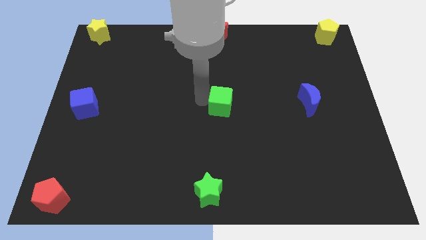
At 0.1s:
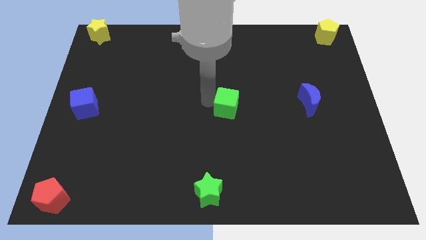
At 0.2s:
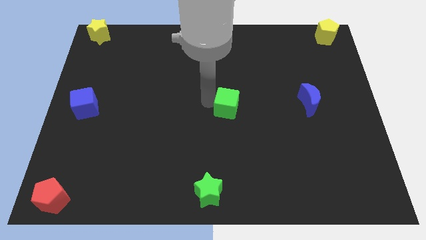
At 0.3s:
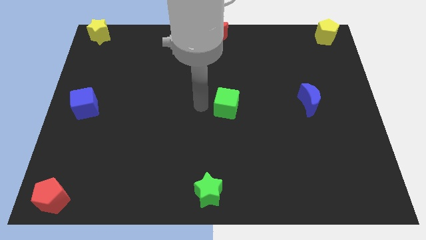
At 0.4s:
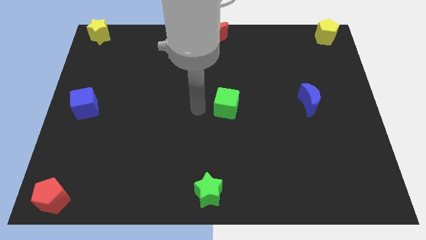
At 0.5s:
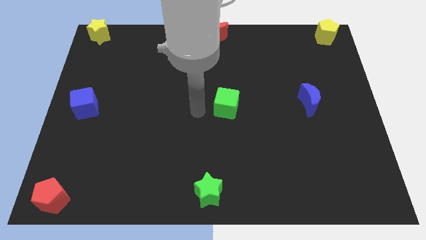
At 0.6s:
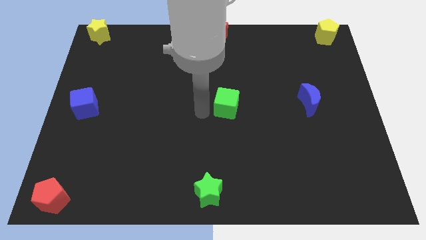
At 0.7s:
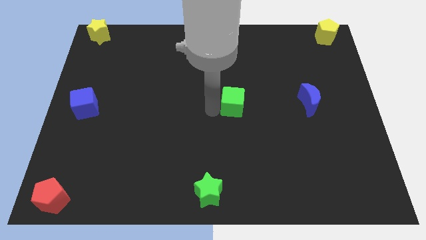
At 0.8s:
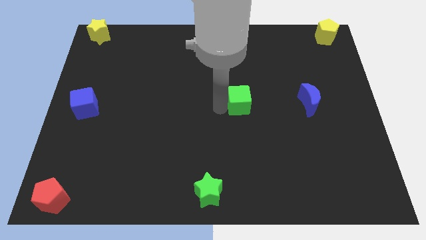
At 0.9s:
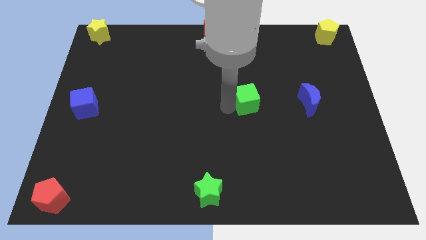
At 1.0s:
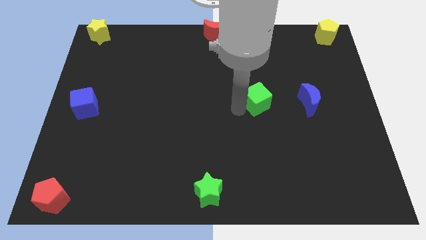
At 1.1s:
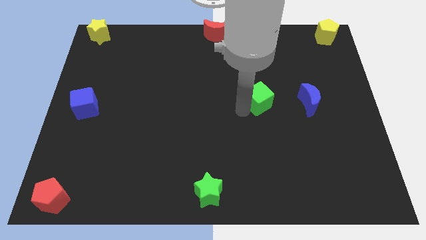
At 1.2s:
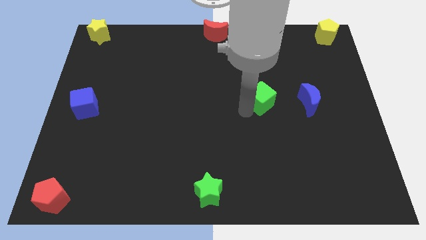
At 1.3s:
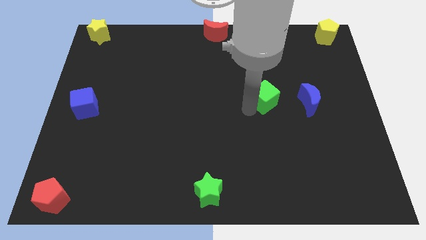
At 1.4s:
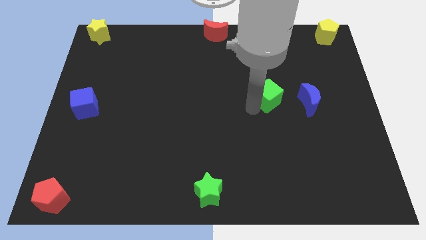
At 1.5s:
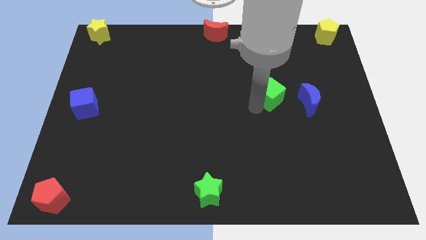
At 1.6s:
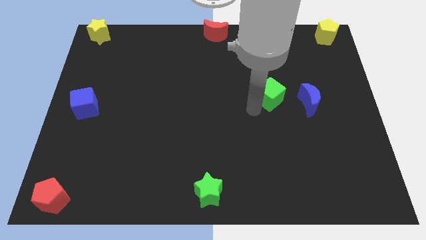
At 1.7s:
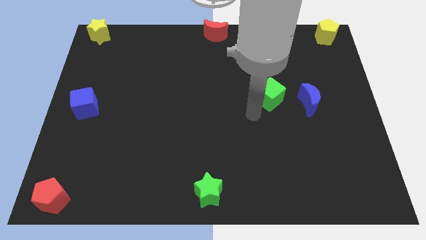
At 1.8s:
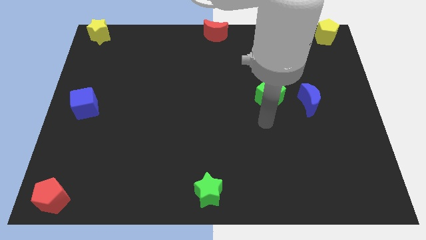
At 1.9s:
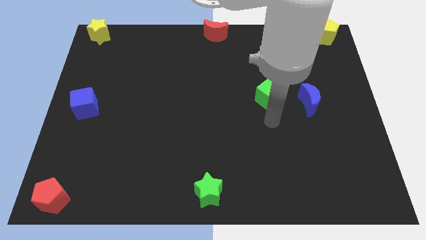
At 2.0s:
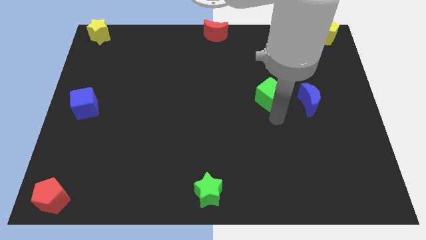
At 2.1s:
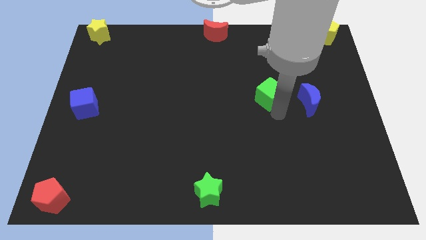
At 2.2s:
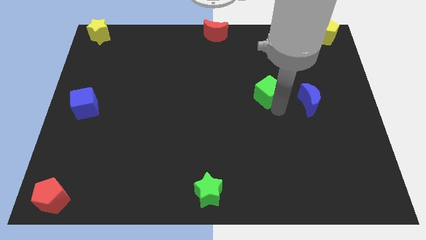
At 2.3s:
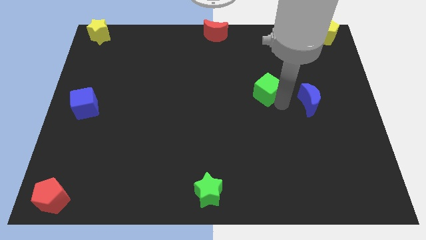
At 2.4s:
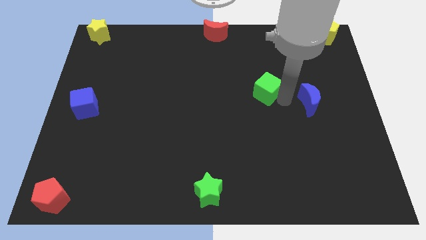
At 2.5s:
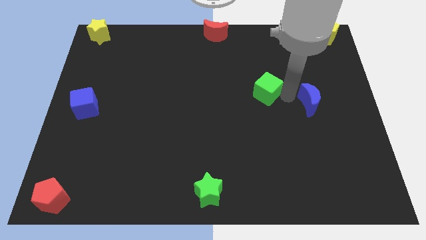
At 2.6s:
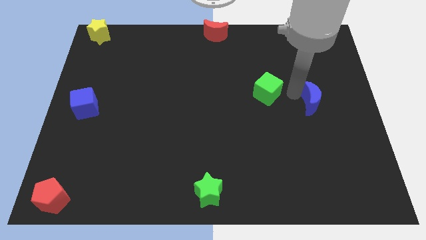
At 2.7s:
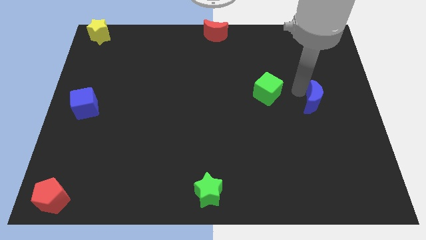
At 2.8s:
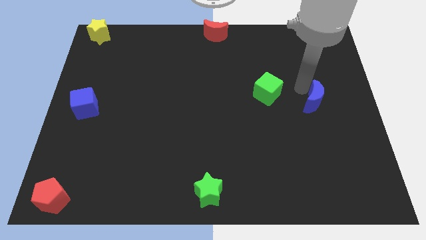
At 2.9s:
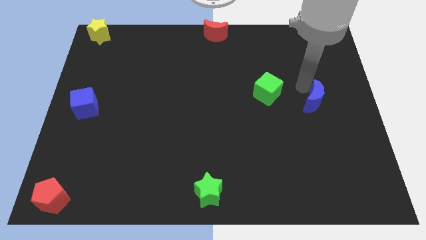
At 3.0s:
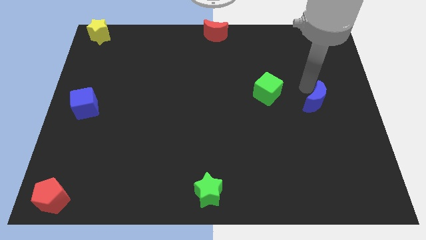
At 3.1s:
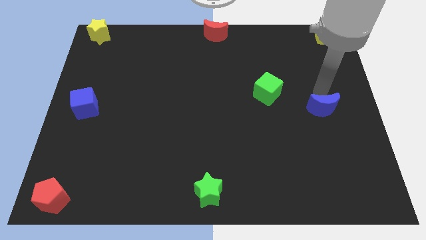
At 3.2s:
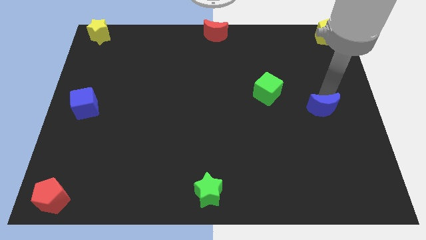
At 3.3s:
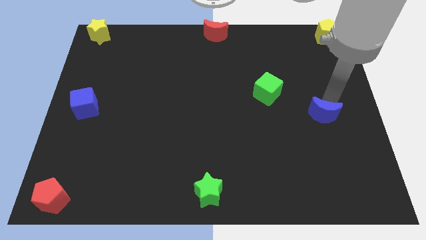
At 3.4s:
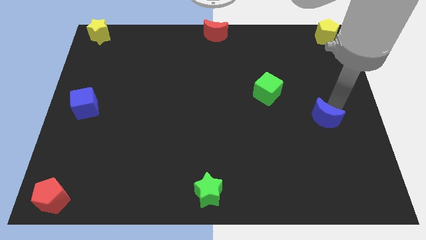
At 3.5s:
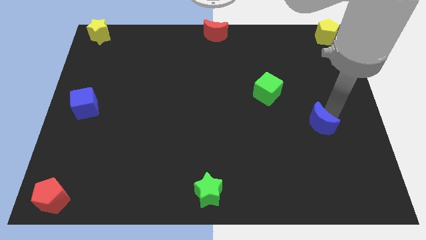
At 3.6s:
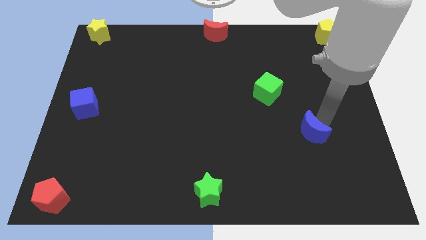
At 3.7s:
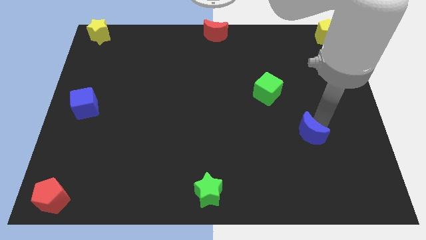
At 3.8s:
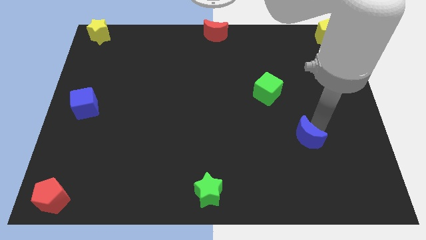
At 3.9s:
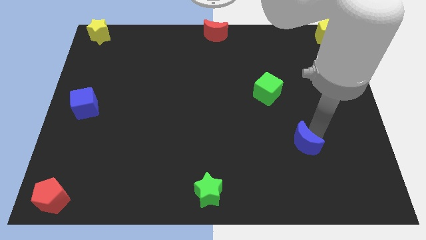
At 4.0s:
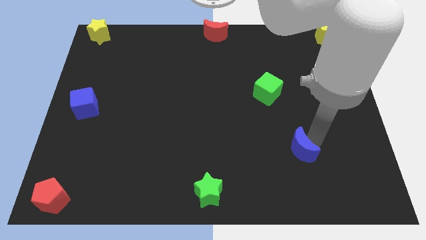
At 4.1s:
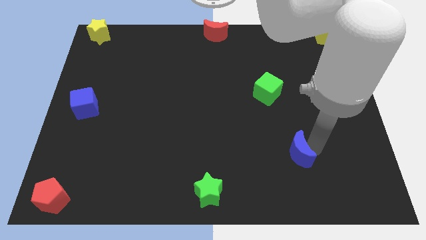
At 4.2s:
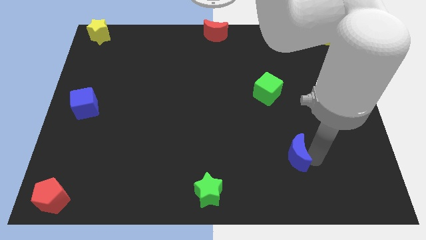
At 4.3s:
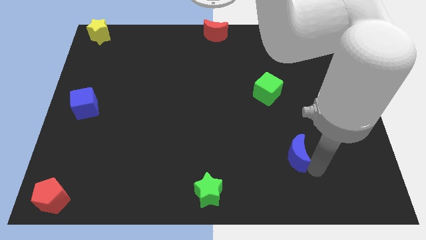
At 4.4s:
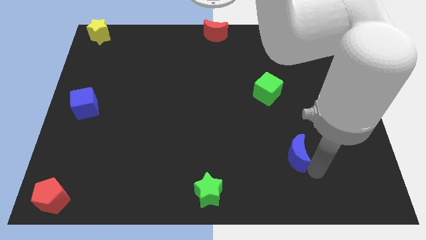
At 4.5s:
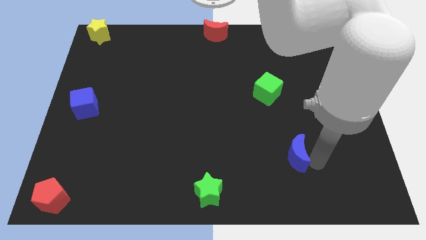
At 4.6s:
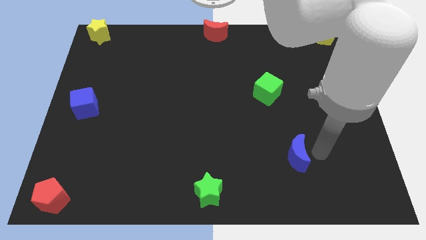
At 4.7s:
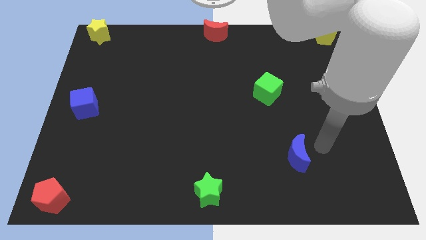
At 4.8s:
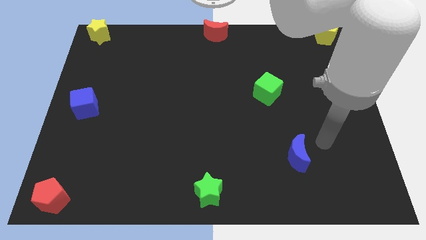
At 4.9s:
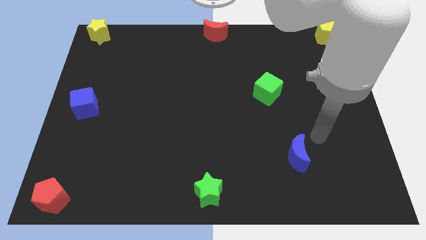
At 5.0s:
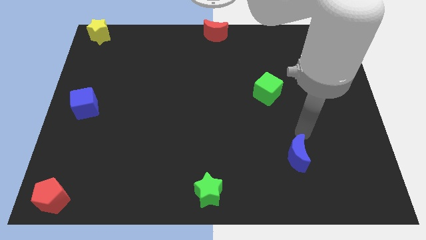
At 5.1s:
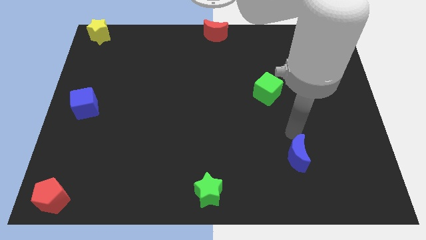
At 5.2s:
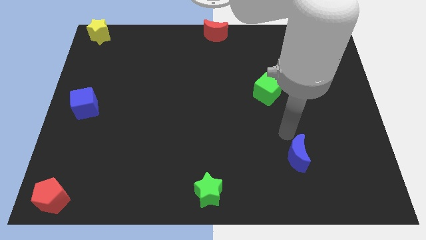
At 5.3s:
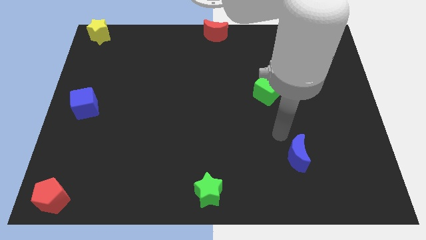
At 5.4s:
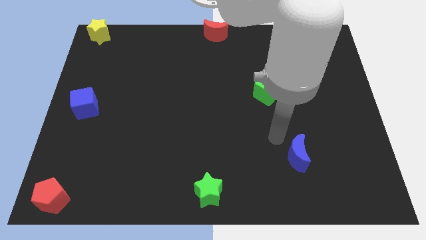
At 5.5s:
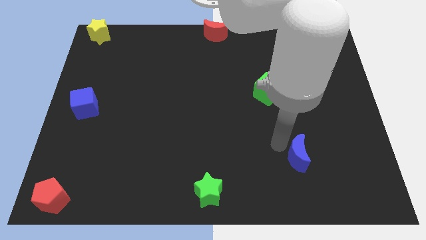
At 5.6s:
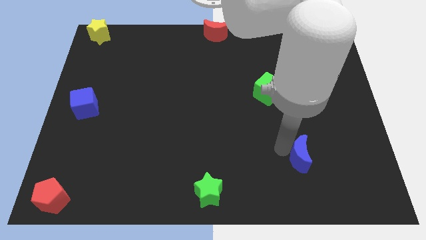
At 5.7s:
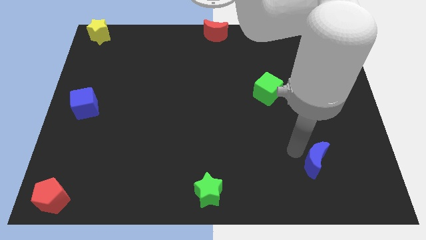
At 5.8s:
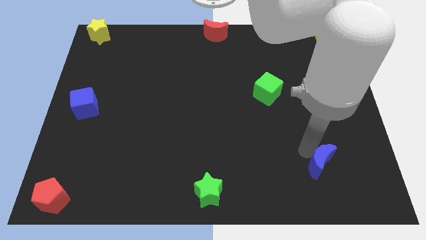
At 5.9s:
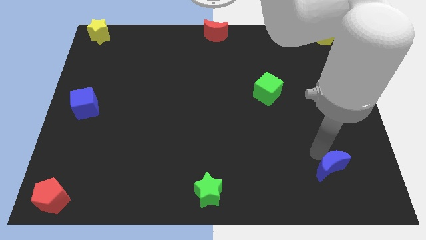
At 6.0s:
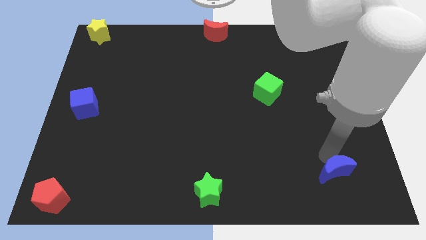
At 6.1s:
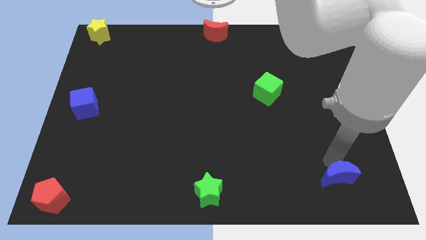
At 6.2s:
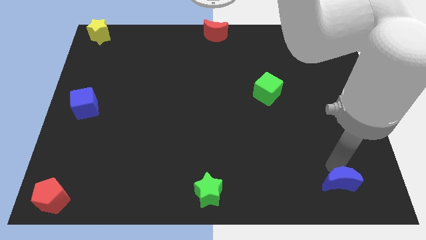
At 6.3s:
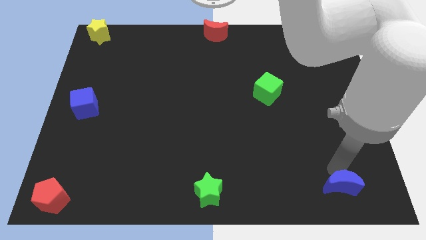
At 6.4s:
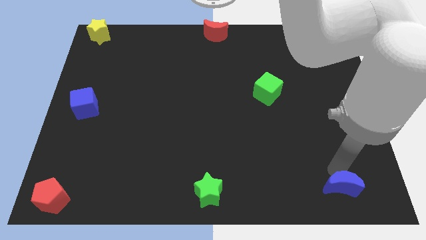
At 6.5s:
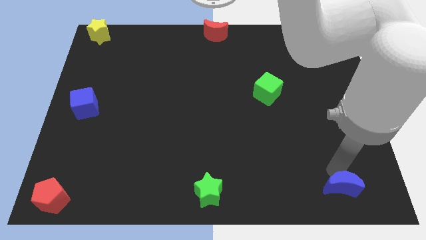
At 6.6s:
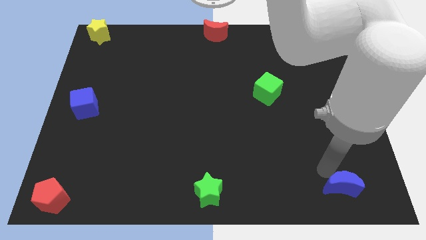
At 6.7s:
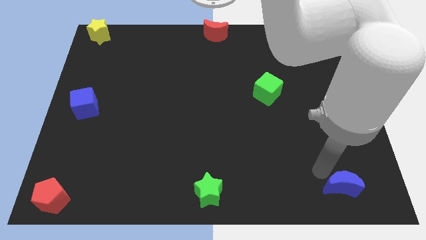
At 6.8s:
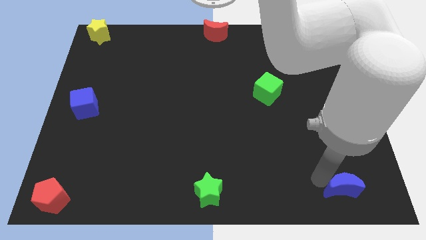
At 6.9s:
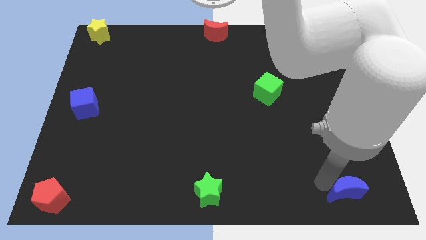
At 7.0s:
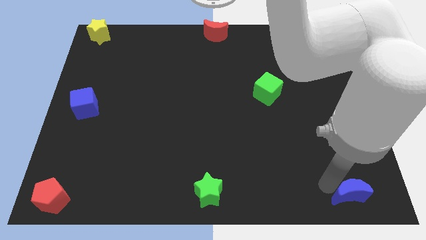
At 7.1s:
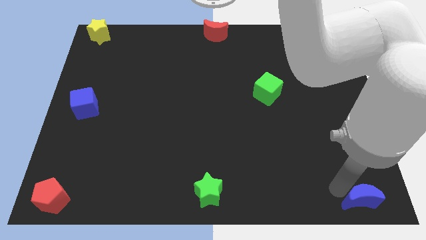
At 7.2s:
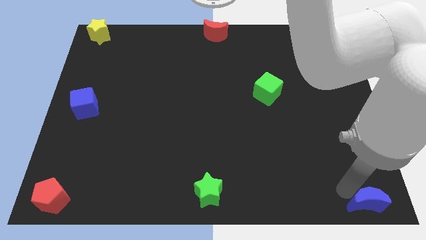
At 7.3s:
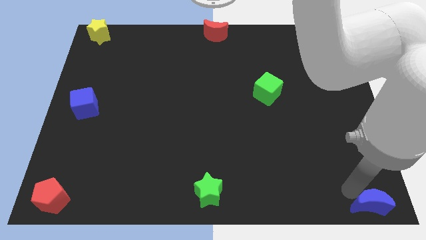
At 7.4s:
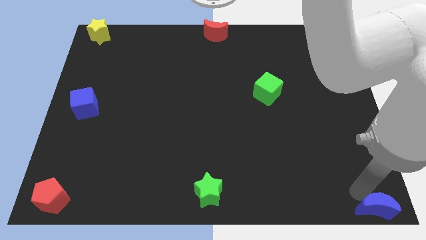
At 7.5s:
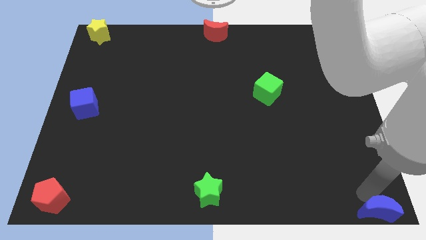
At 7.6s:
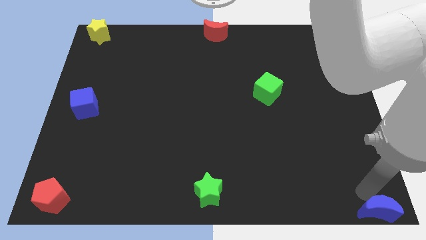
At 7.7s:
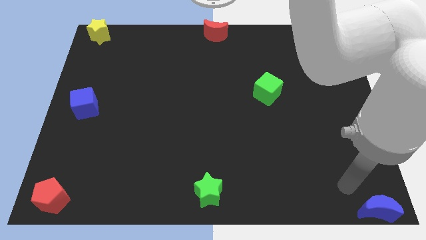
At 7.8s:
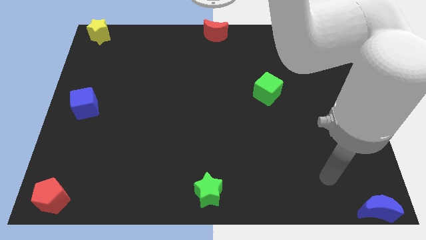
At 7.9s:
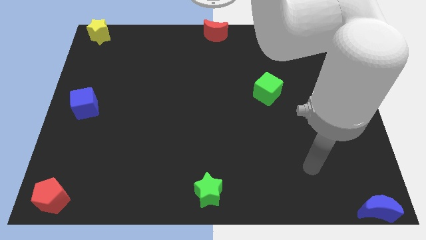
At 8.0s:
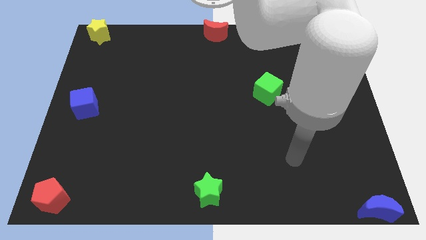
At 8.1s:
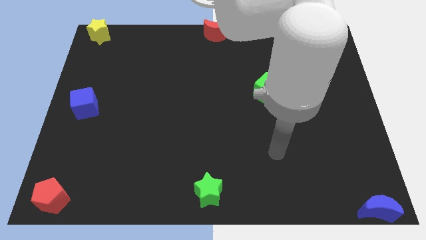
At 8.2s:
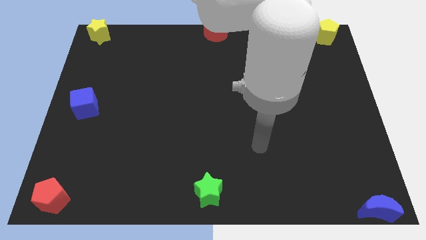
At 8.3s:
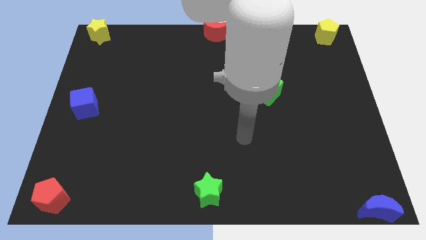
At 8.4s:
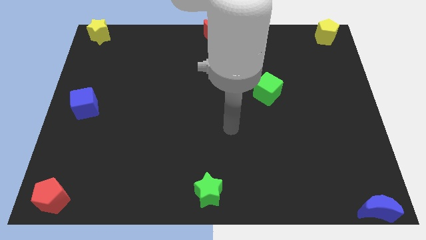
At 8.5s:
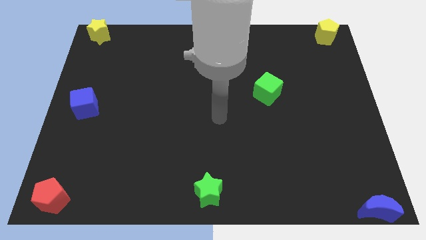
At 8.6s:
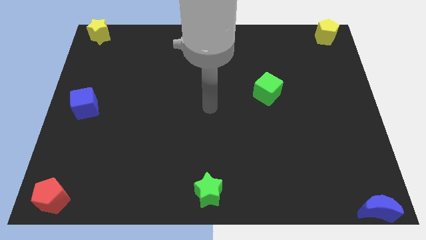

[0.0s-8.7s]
move the blue crescent to the bottom right corner

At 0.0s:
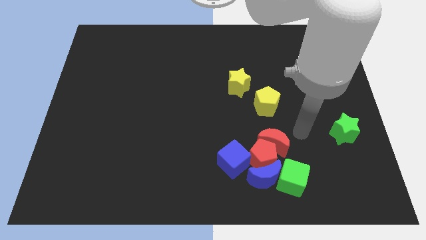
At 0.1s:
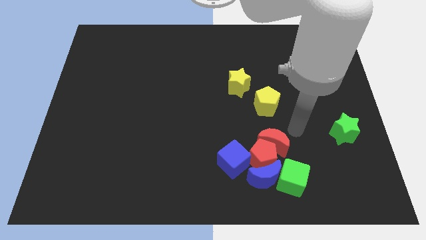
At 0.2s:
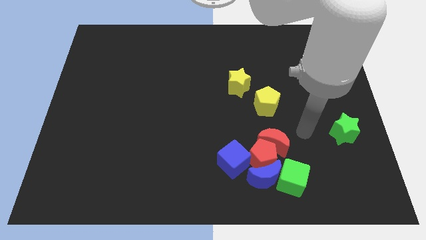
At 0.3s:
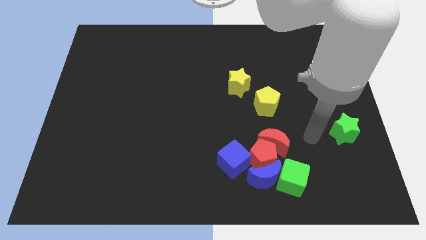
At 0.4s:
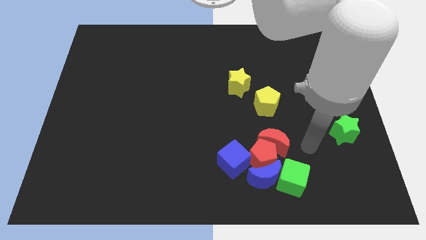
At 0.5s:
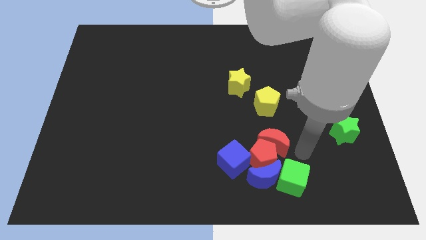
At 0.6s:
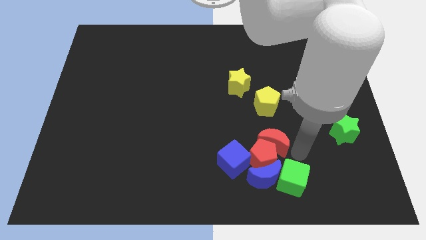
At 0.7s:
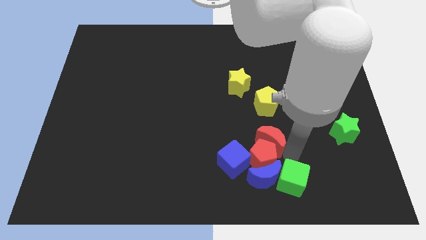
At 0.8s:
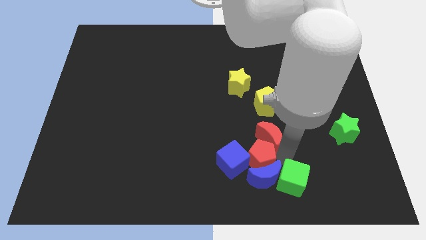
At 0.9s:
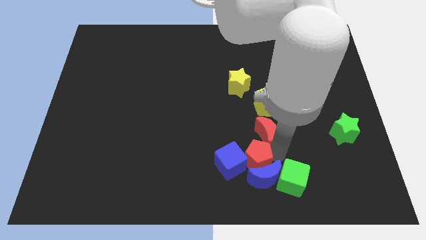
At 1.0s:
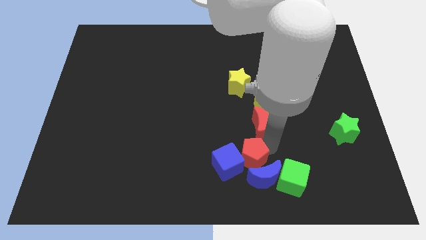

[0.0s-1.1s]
push the red moon into the group of blocks
